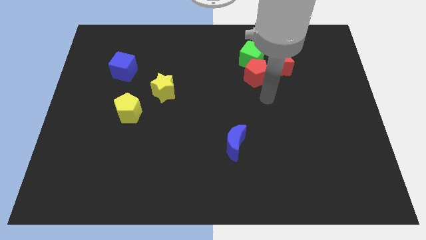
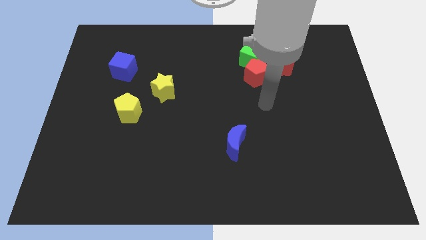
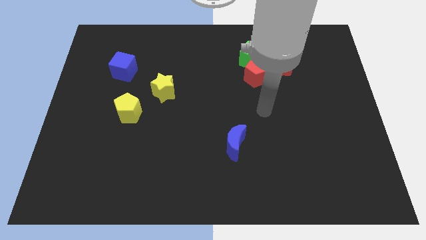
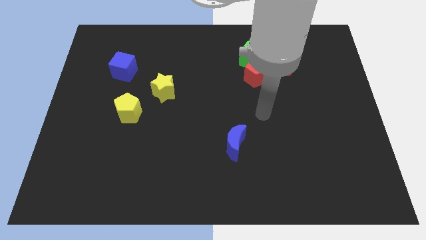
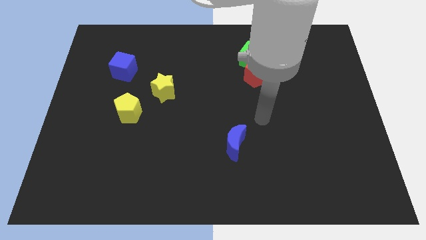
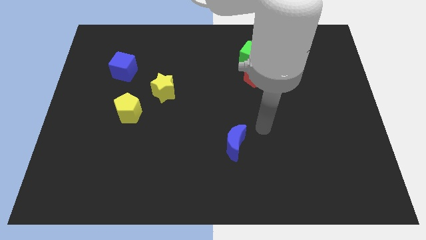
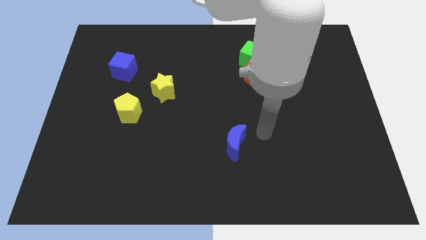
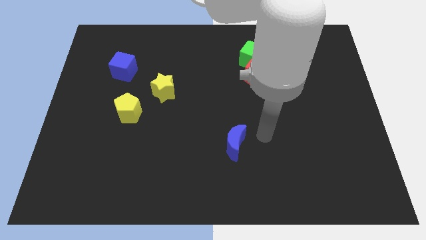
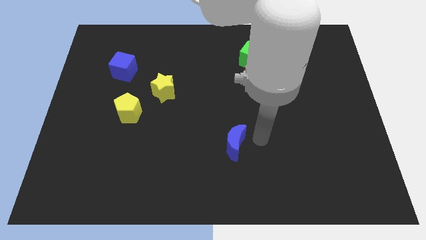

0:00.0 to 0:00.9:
move the arm from the red pentagon towards the blue crescent

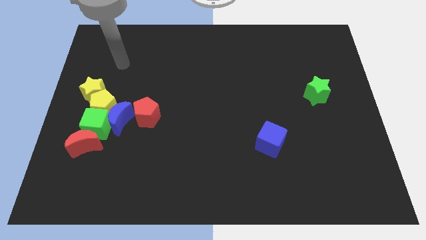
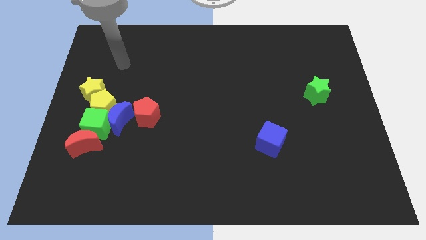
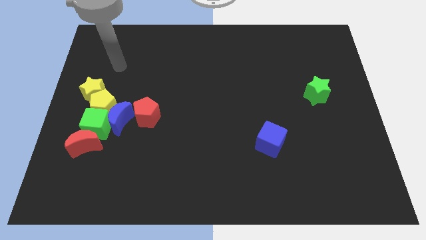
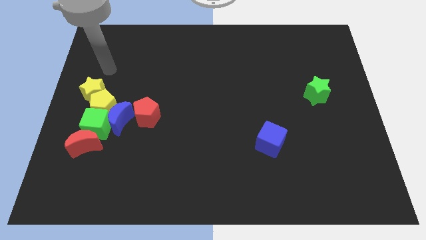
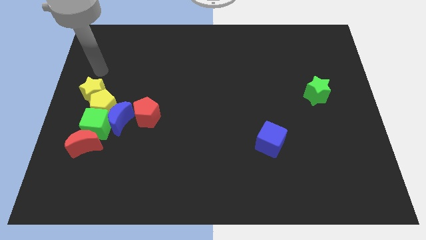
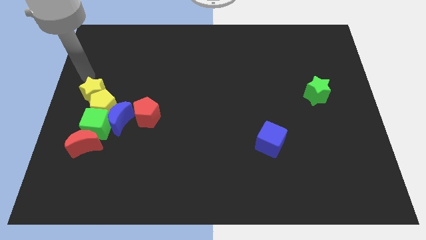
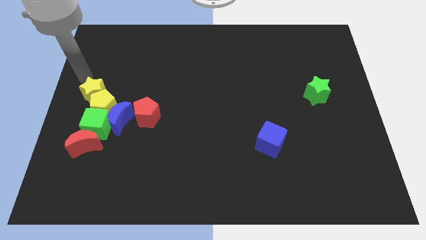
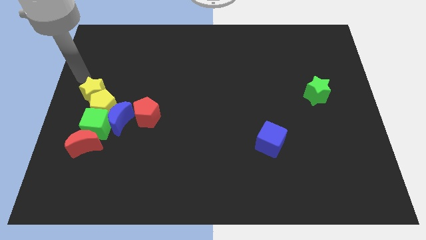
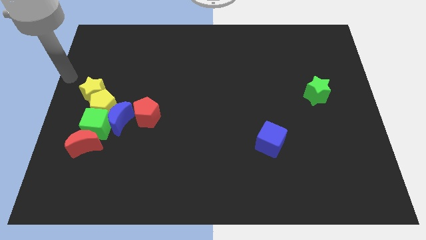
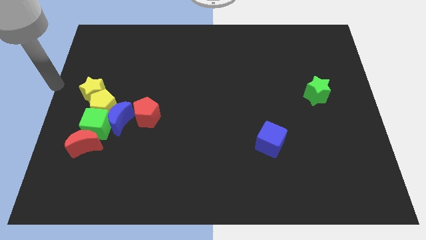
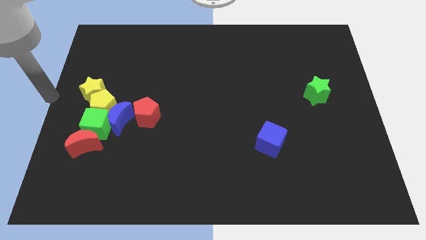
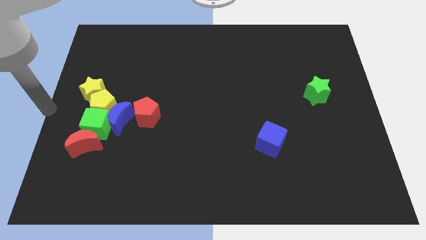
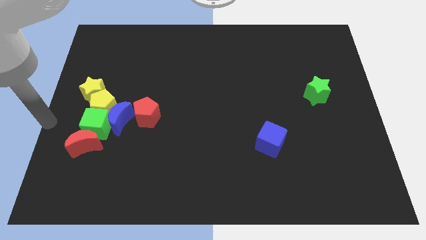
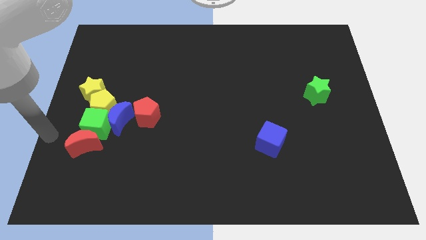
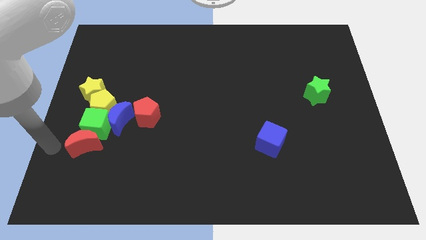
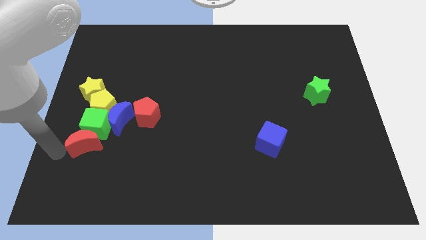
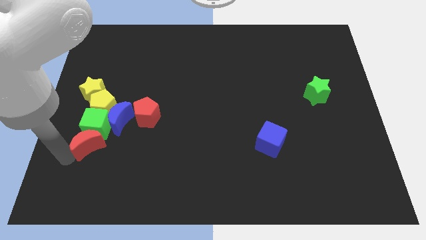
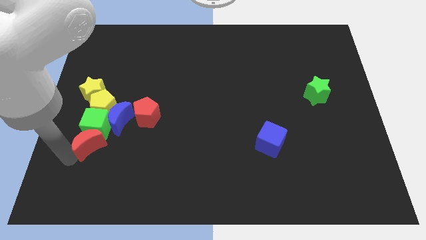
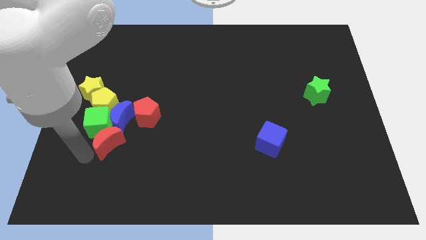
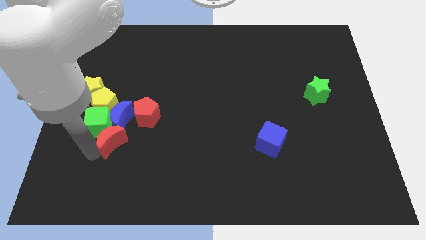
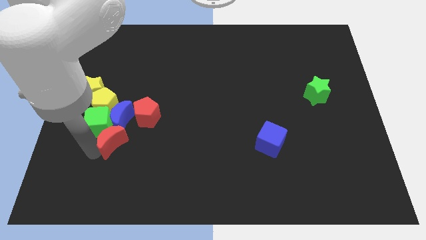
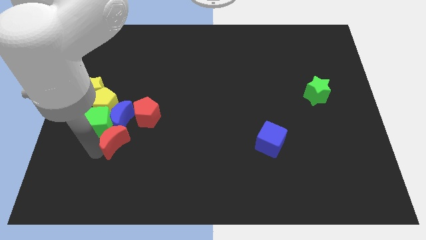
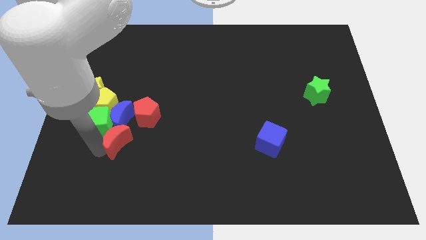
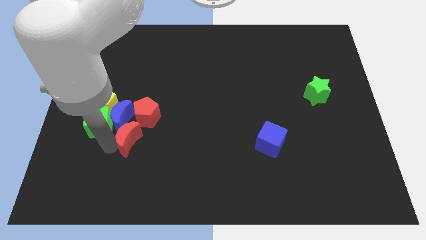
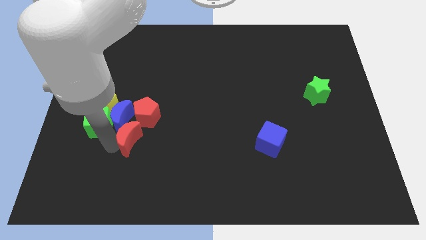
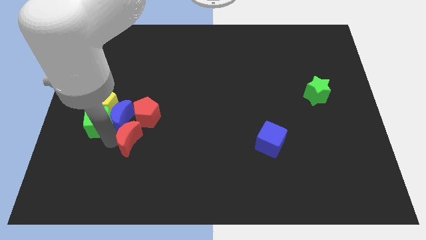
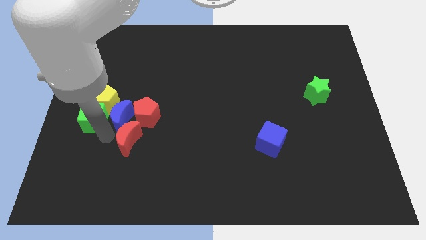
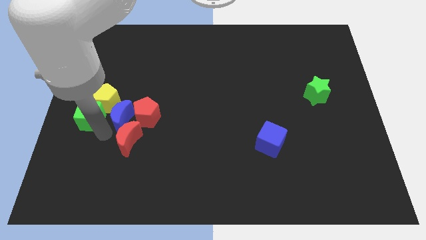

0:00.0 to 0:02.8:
push the red crescent to the bottom left of the red pentagon

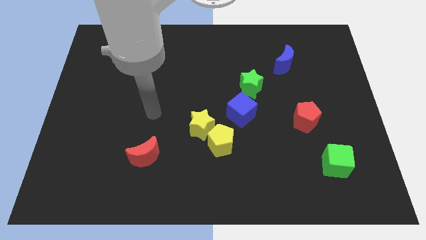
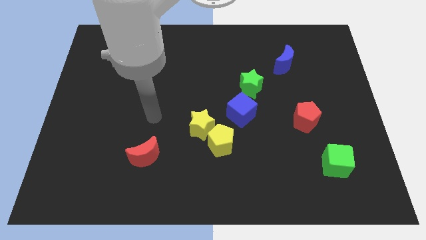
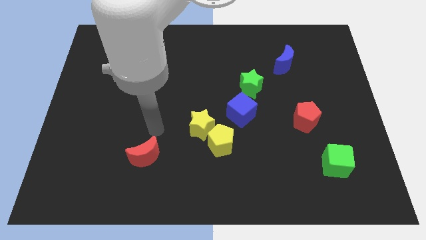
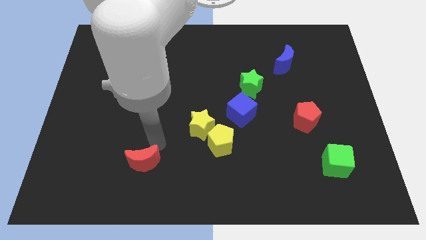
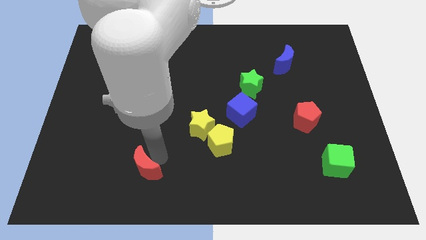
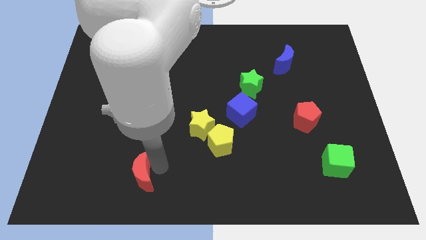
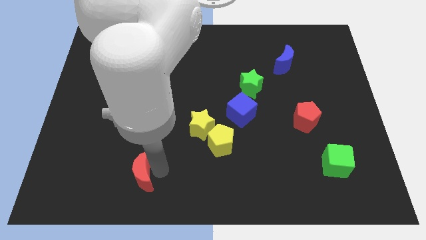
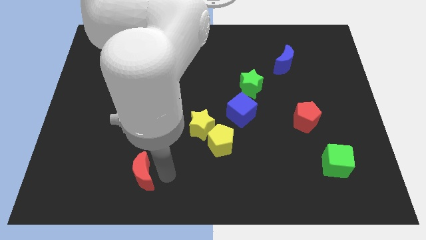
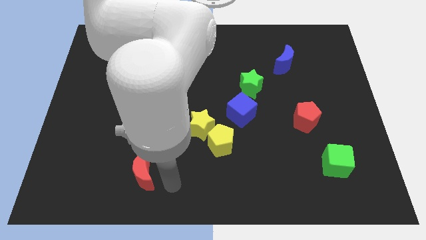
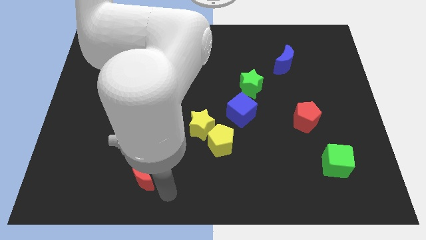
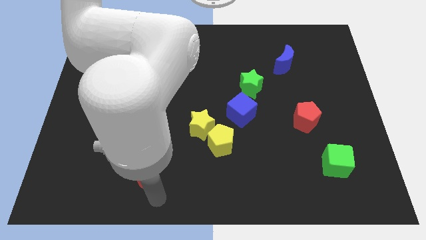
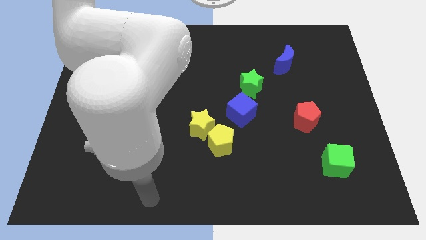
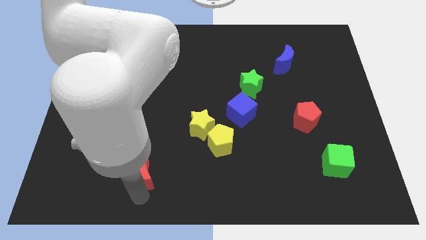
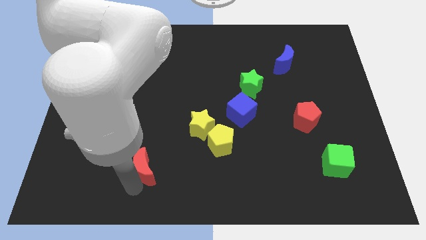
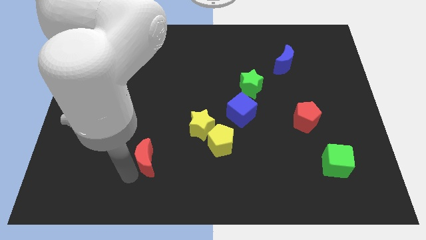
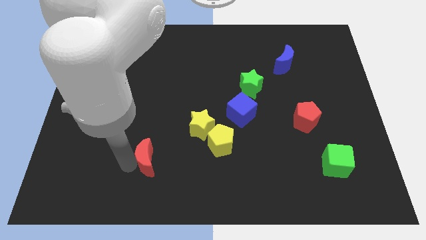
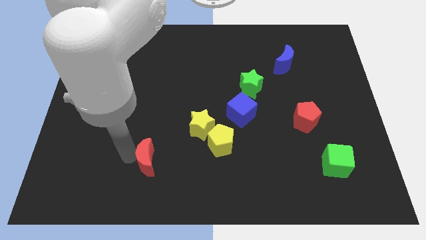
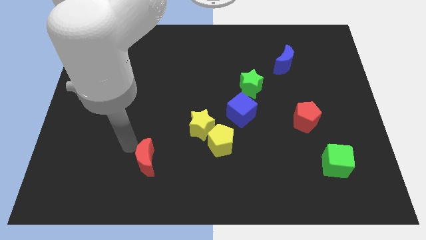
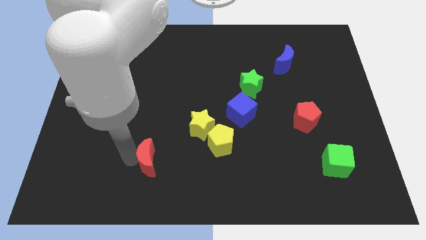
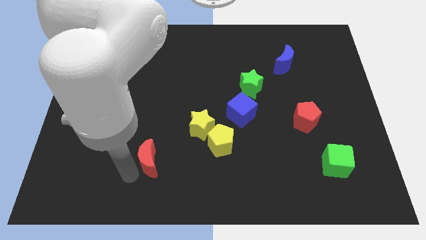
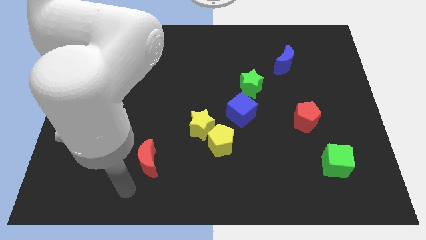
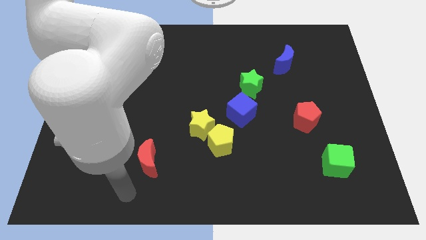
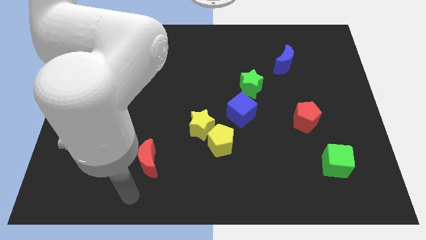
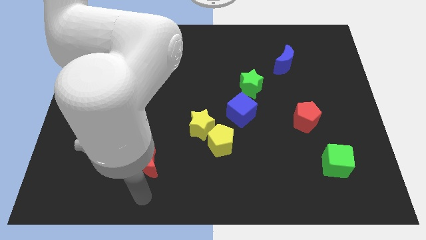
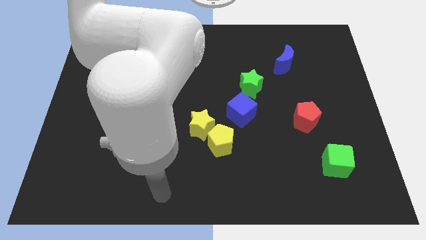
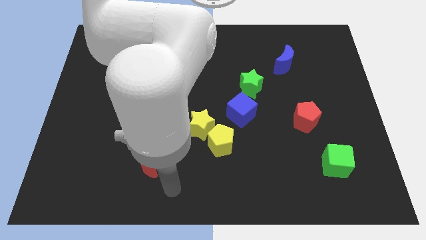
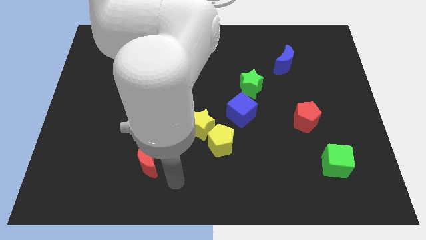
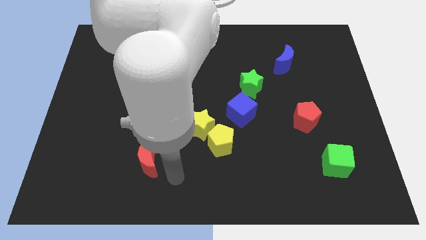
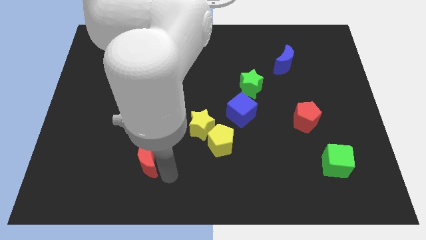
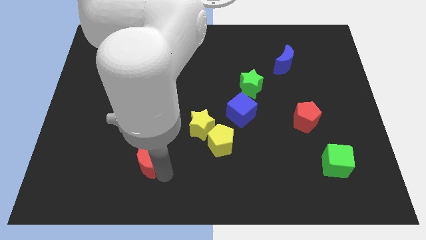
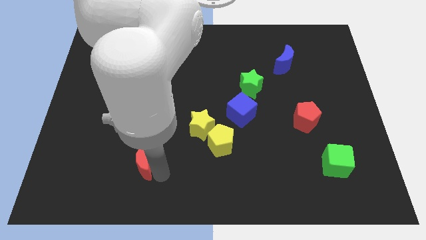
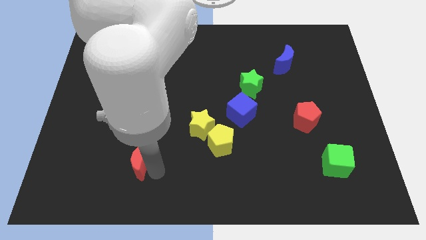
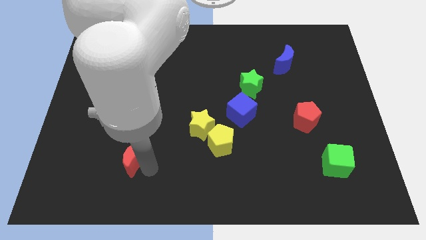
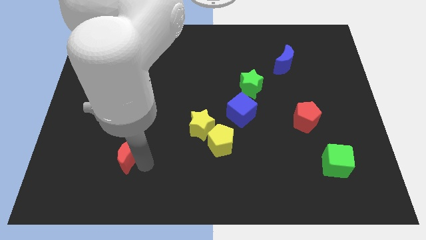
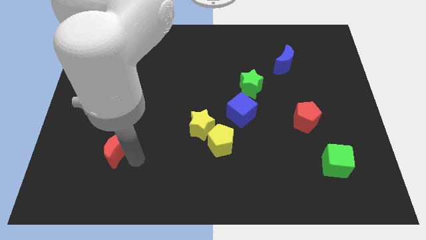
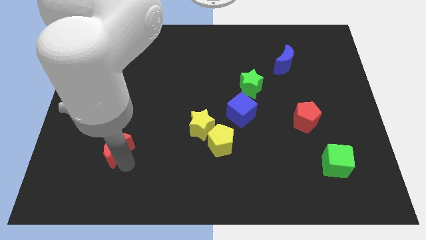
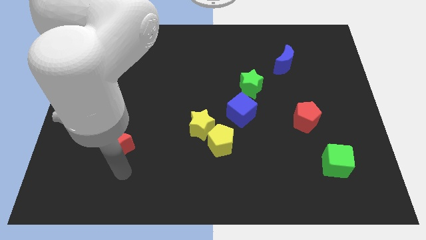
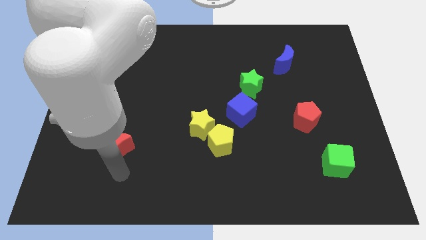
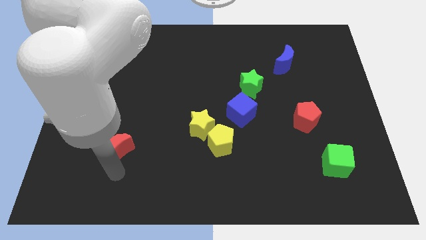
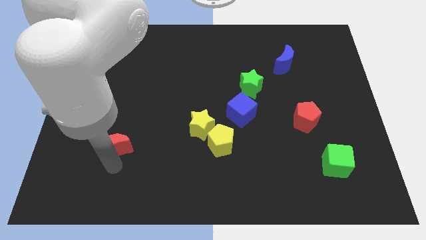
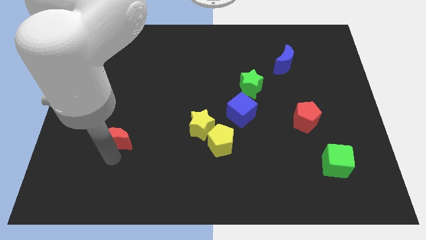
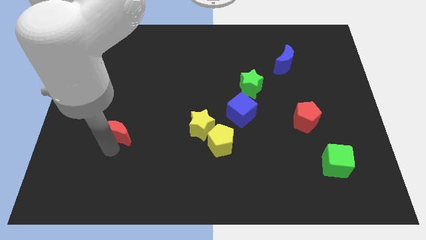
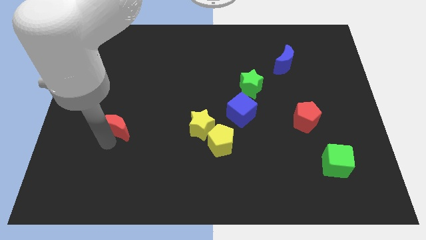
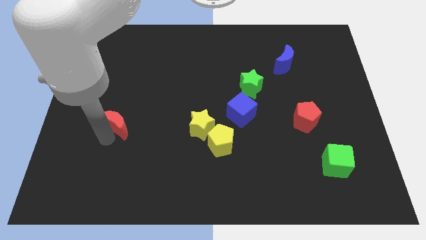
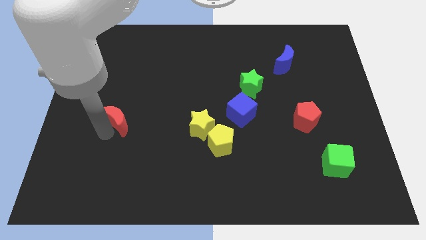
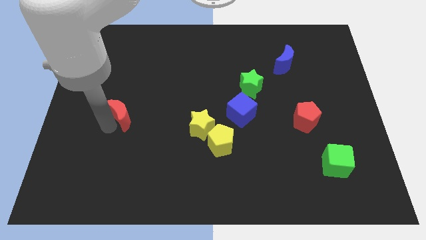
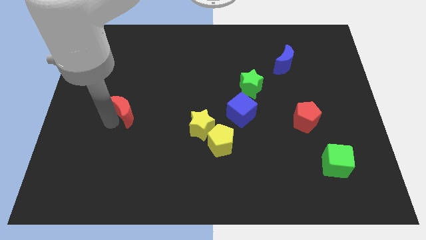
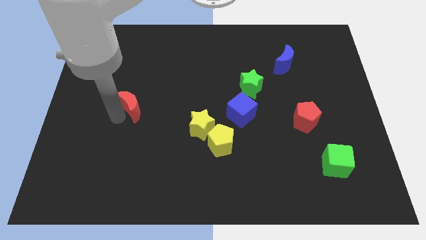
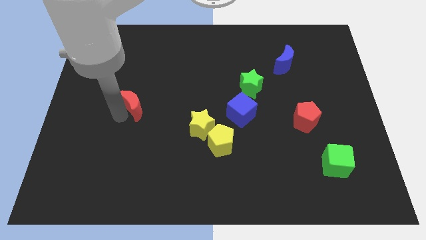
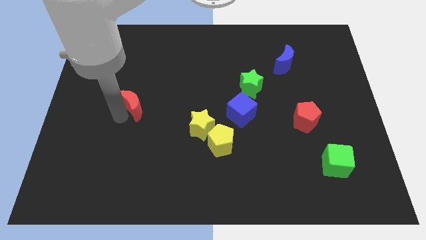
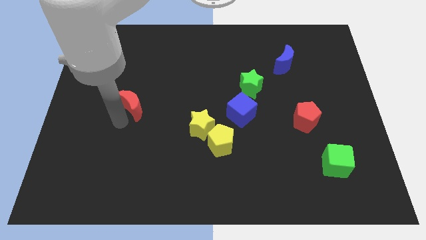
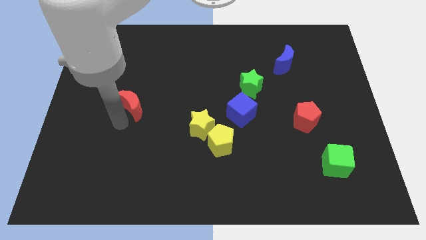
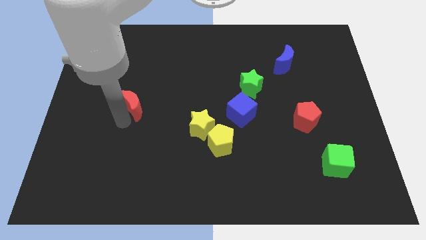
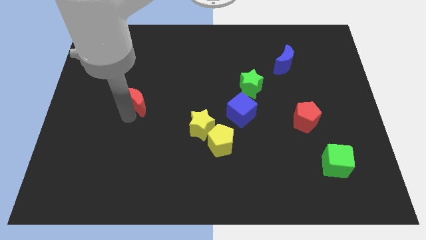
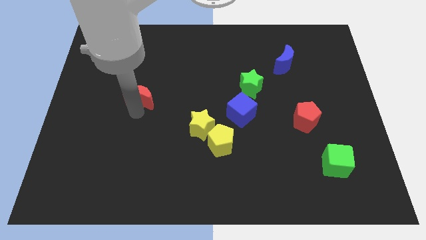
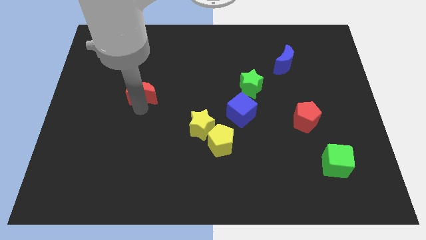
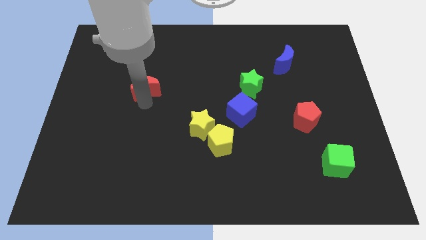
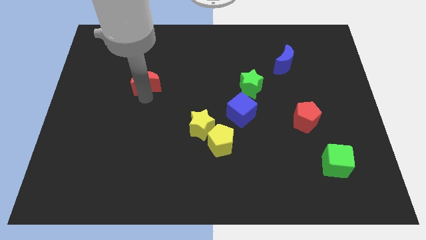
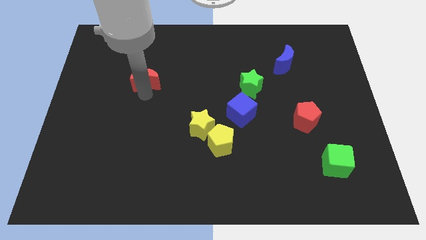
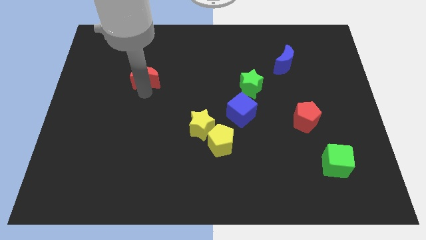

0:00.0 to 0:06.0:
push the red moon towards up
